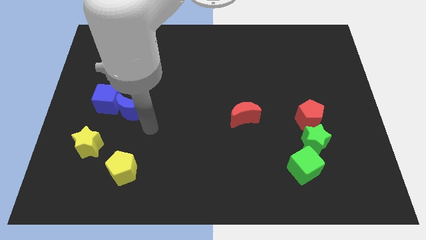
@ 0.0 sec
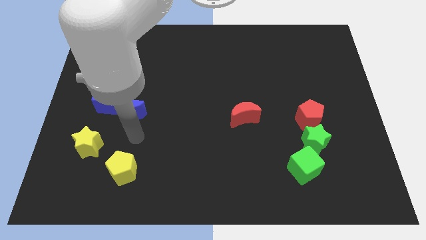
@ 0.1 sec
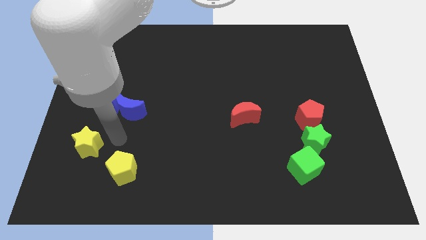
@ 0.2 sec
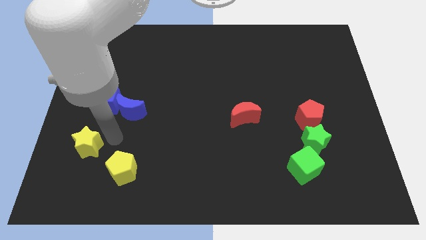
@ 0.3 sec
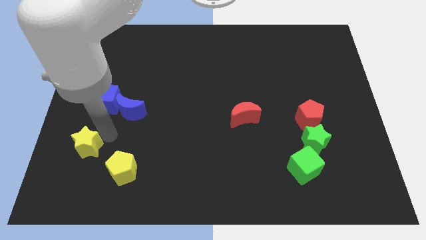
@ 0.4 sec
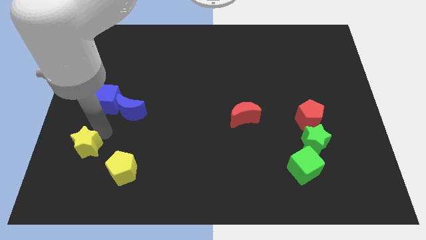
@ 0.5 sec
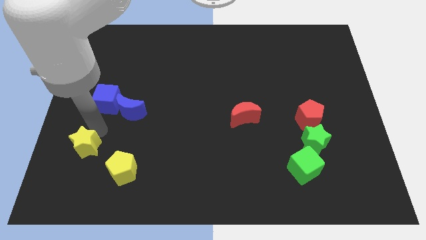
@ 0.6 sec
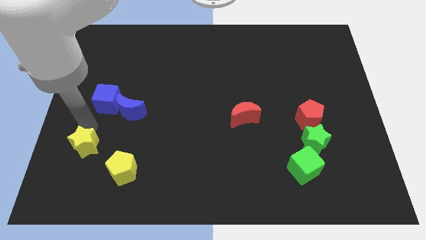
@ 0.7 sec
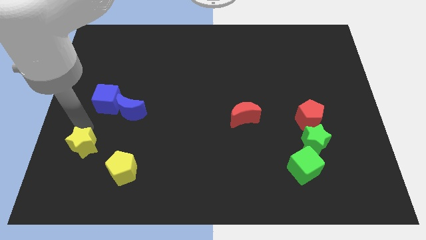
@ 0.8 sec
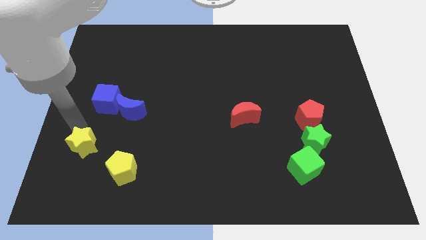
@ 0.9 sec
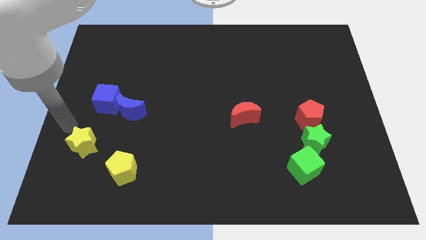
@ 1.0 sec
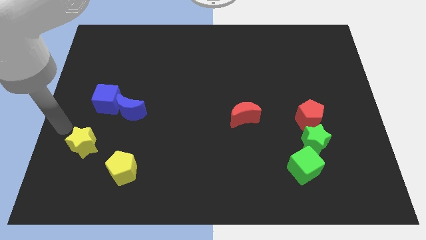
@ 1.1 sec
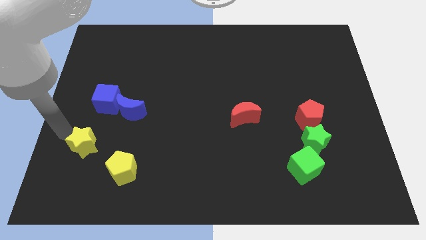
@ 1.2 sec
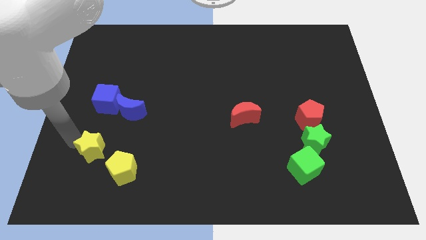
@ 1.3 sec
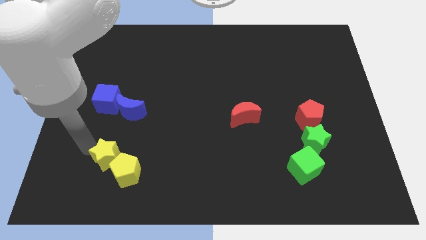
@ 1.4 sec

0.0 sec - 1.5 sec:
put yellow blocks together

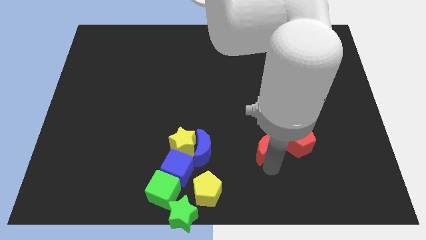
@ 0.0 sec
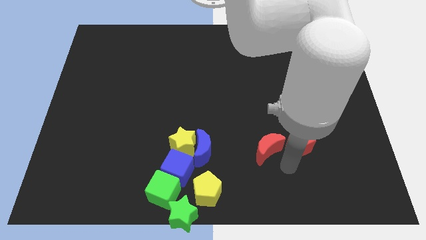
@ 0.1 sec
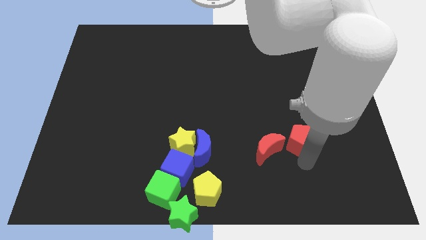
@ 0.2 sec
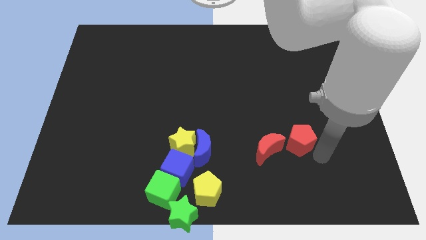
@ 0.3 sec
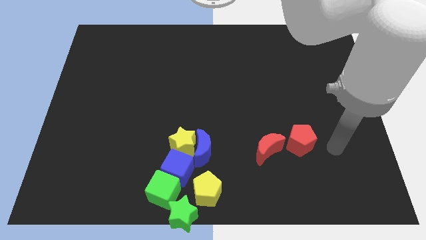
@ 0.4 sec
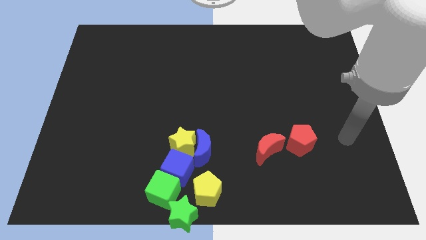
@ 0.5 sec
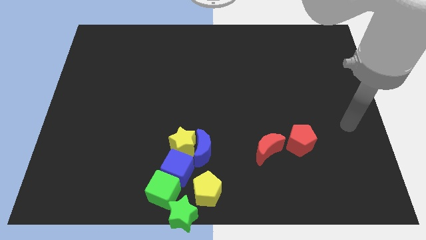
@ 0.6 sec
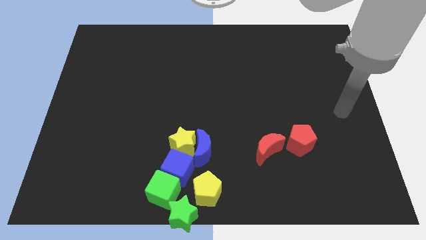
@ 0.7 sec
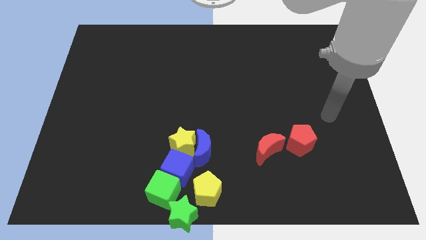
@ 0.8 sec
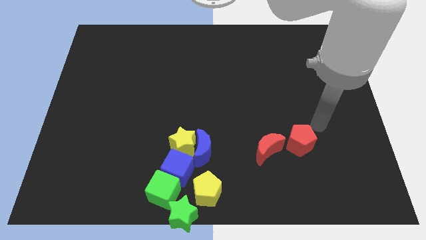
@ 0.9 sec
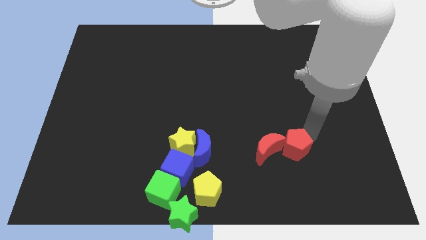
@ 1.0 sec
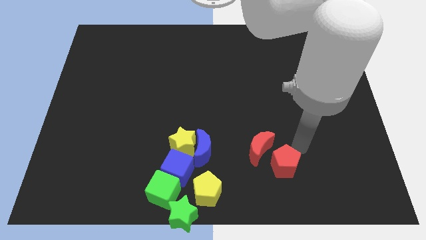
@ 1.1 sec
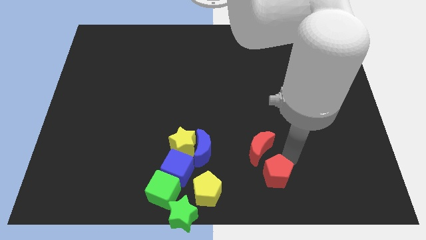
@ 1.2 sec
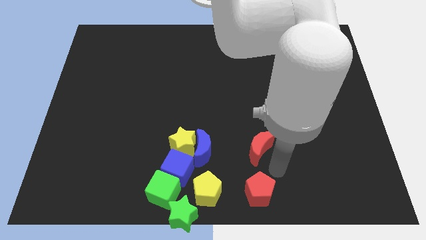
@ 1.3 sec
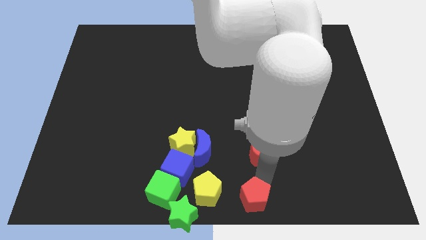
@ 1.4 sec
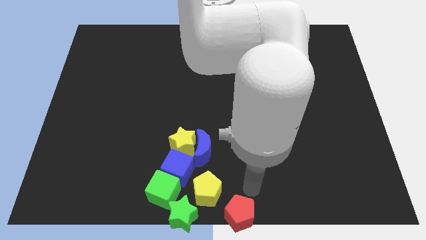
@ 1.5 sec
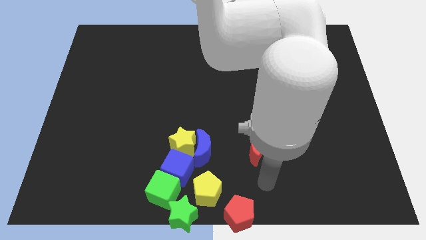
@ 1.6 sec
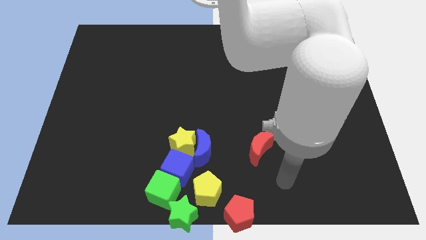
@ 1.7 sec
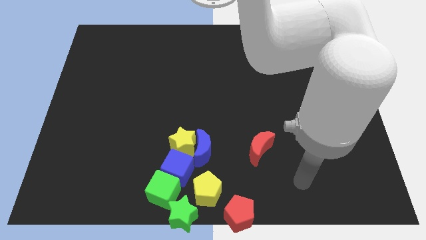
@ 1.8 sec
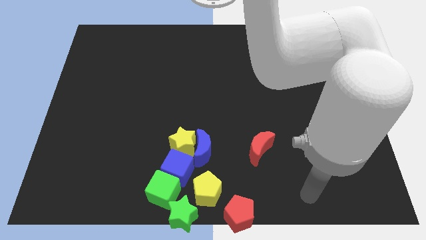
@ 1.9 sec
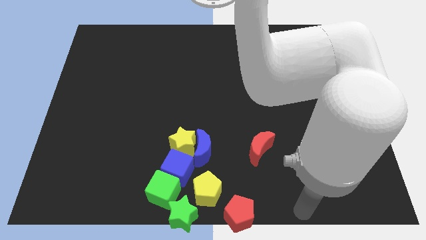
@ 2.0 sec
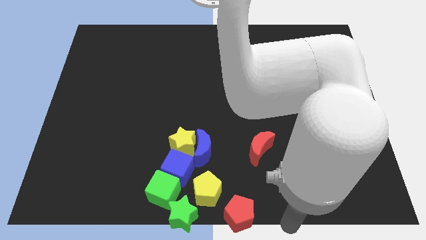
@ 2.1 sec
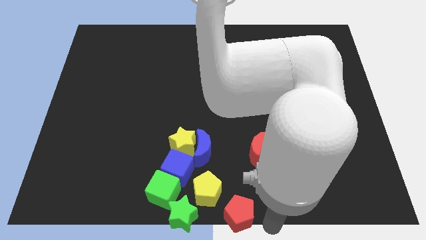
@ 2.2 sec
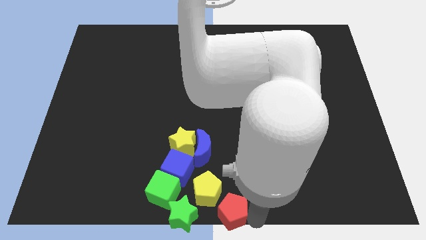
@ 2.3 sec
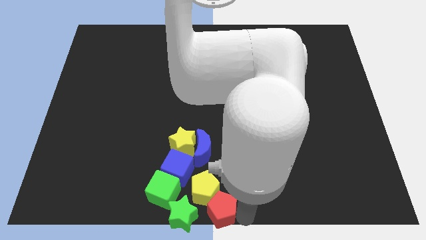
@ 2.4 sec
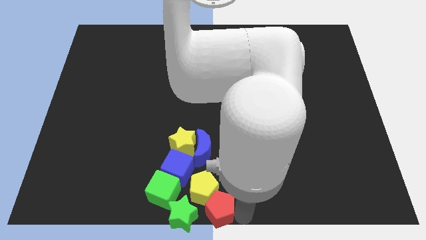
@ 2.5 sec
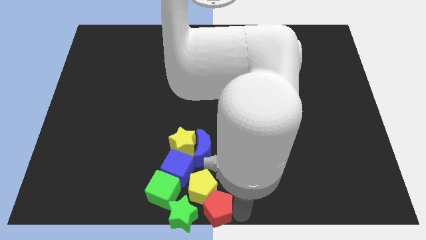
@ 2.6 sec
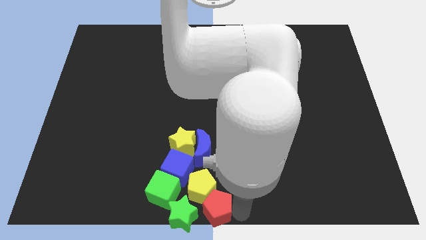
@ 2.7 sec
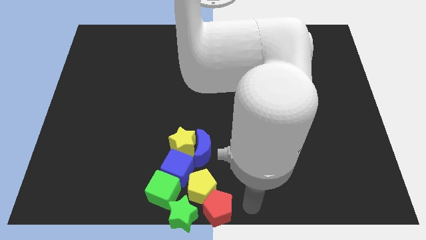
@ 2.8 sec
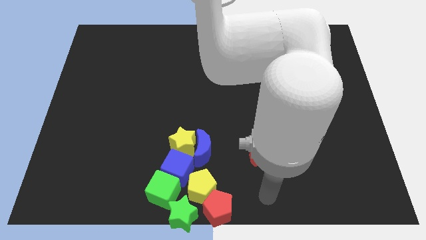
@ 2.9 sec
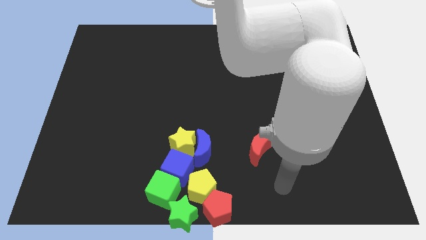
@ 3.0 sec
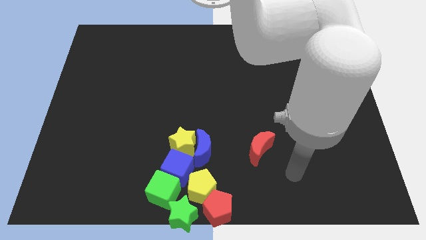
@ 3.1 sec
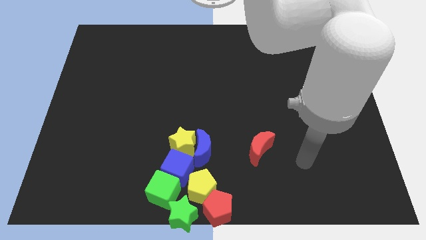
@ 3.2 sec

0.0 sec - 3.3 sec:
separate the red pentagon from the red crescent

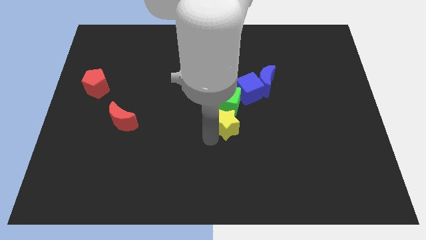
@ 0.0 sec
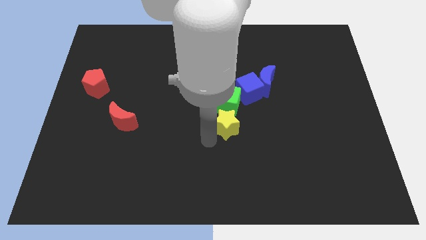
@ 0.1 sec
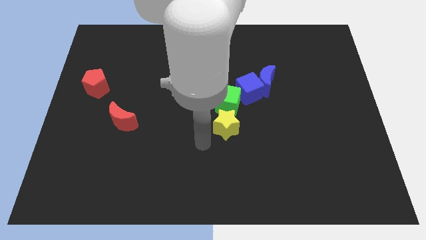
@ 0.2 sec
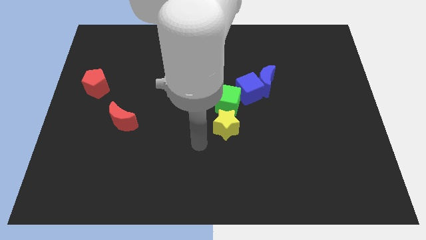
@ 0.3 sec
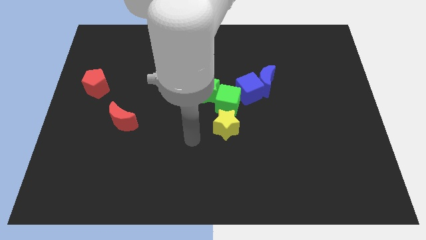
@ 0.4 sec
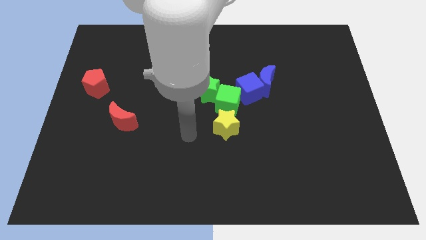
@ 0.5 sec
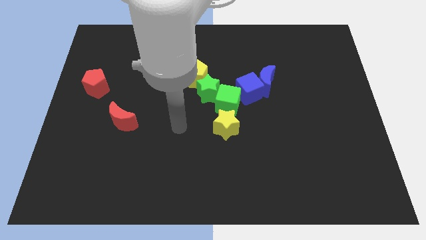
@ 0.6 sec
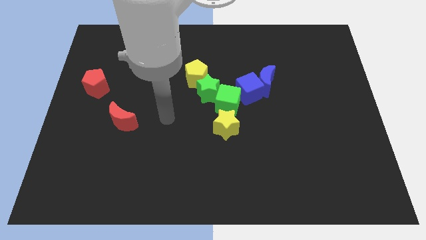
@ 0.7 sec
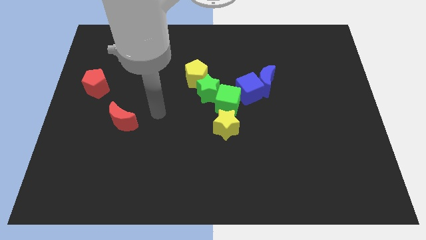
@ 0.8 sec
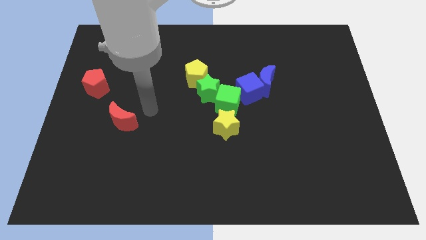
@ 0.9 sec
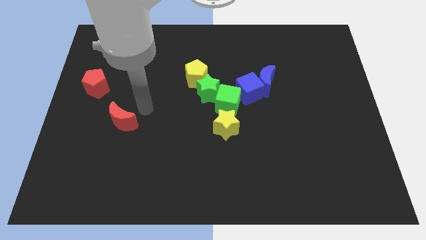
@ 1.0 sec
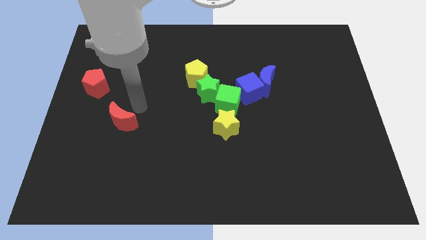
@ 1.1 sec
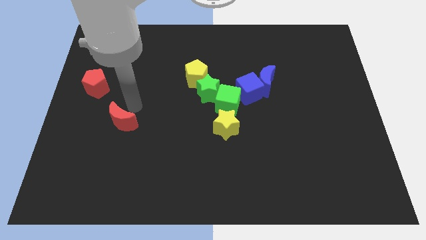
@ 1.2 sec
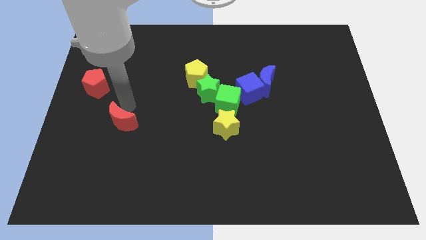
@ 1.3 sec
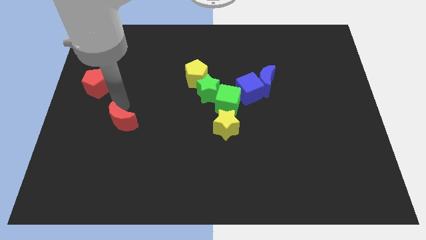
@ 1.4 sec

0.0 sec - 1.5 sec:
move your arm away from the yellow star

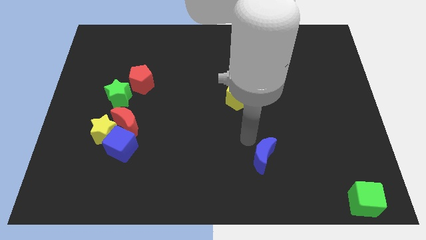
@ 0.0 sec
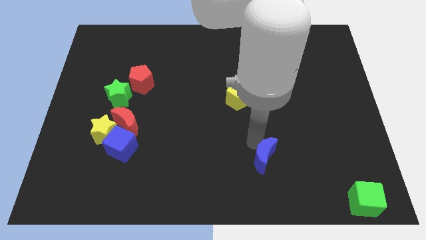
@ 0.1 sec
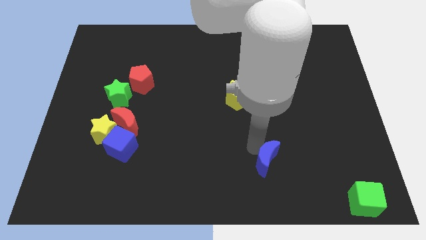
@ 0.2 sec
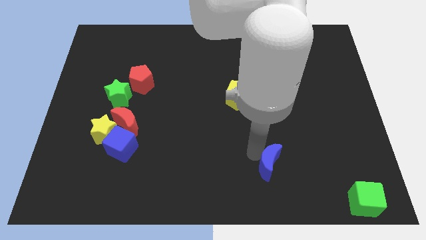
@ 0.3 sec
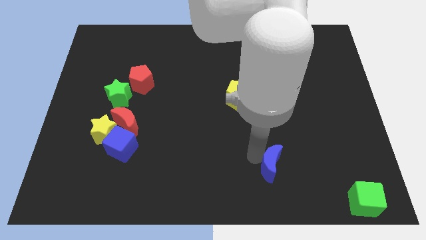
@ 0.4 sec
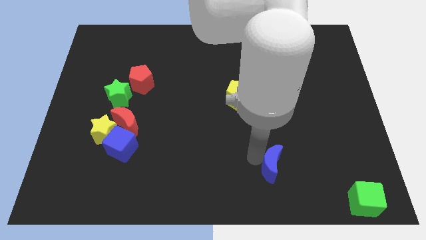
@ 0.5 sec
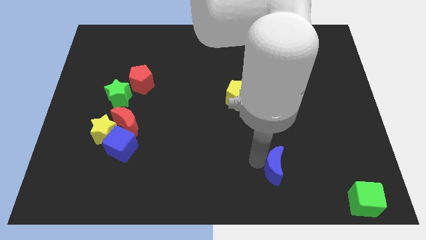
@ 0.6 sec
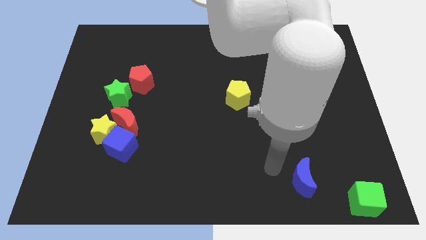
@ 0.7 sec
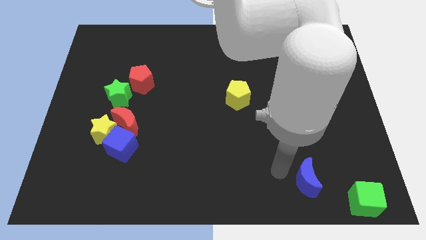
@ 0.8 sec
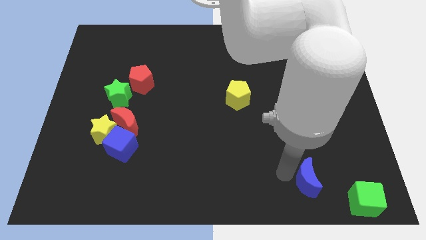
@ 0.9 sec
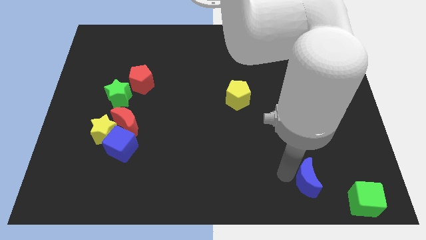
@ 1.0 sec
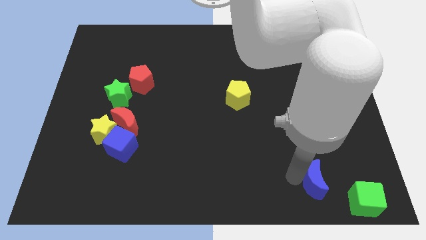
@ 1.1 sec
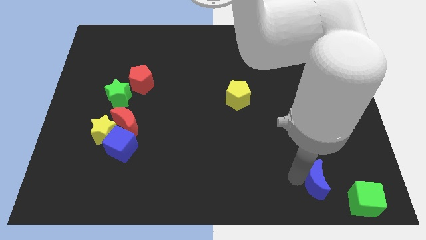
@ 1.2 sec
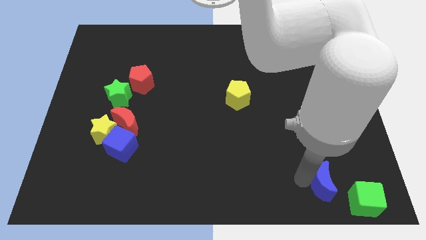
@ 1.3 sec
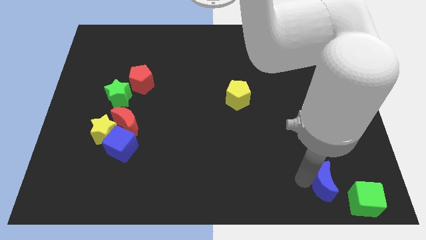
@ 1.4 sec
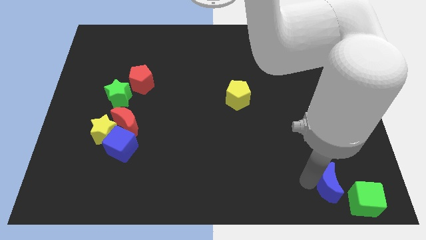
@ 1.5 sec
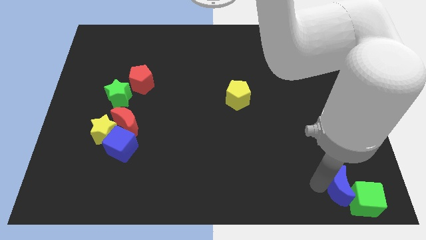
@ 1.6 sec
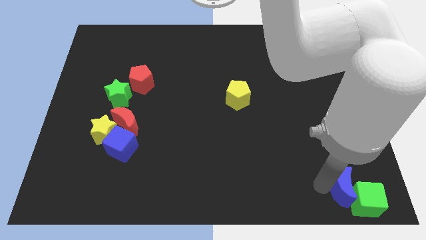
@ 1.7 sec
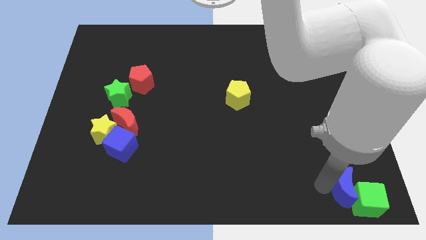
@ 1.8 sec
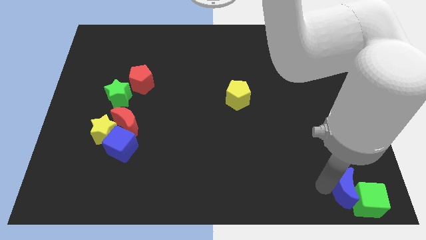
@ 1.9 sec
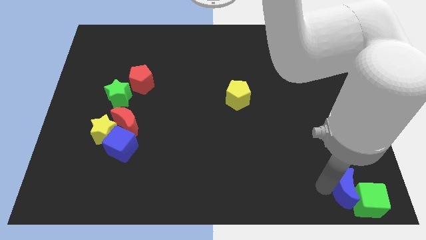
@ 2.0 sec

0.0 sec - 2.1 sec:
push blue half moon towards green cube

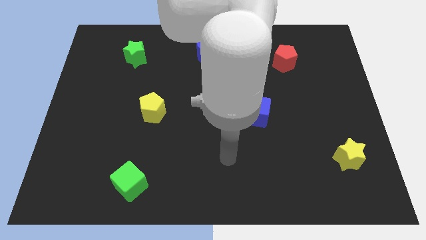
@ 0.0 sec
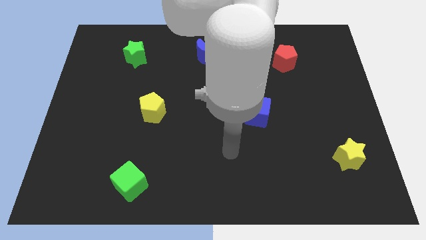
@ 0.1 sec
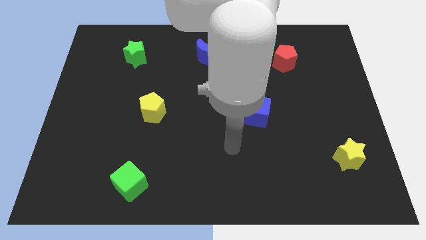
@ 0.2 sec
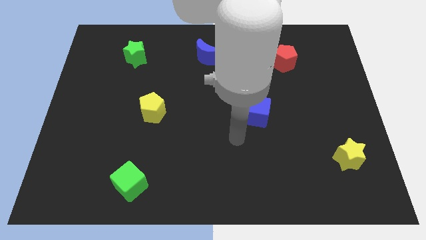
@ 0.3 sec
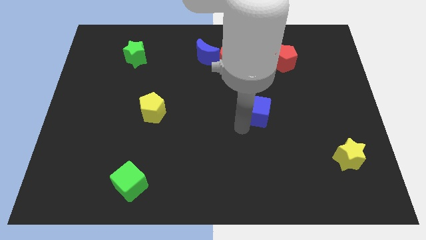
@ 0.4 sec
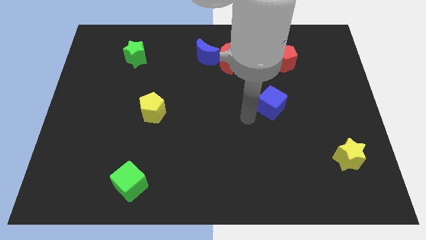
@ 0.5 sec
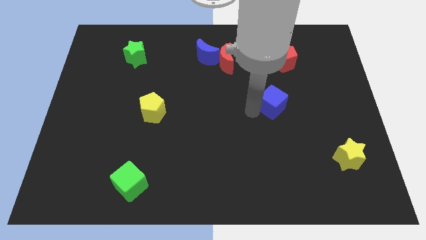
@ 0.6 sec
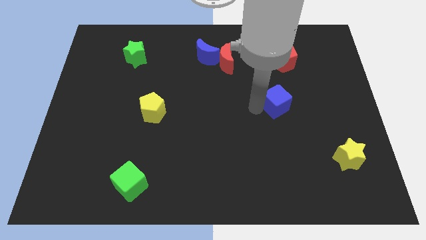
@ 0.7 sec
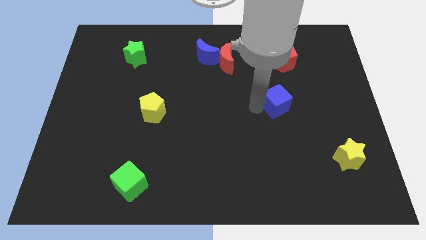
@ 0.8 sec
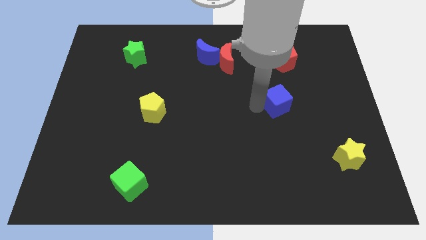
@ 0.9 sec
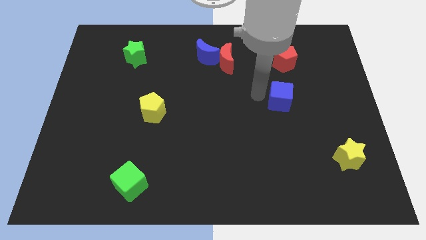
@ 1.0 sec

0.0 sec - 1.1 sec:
touch the blue cube slightly
